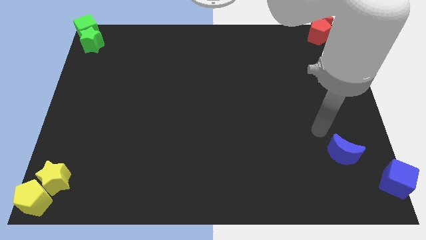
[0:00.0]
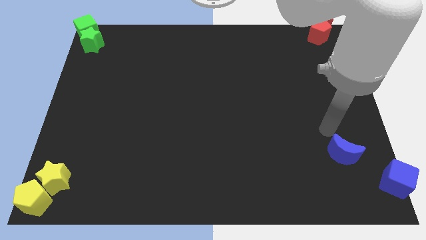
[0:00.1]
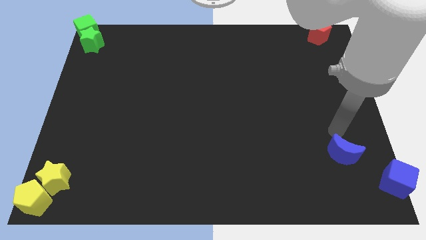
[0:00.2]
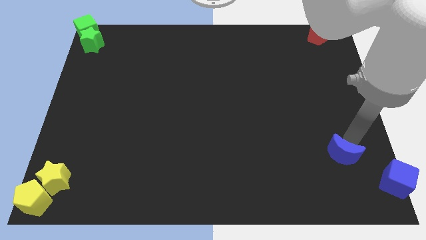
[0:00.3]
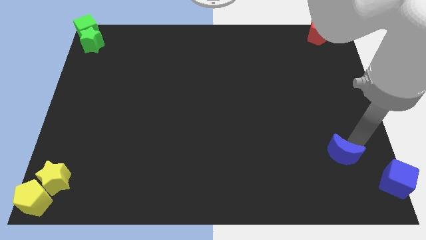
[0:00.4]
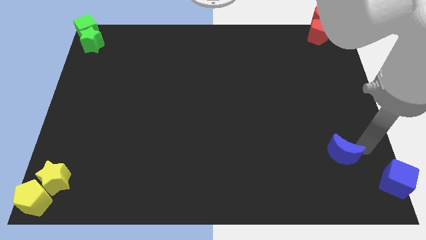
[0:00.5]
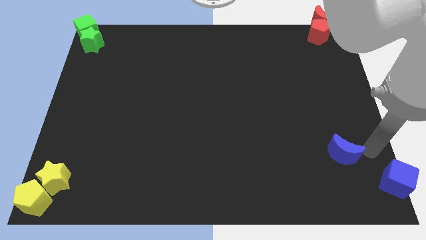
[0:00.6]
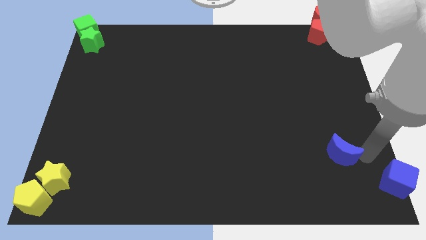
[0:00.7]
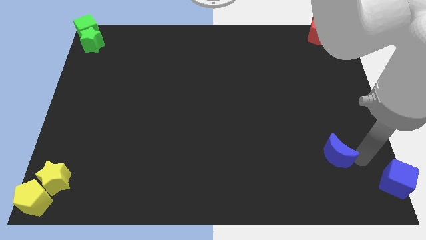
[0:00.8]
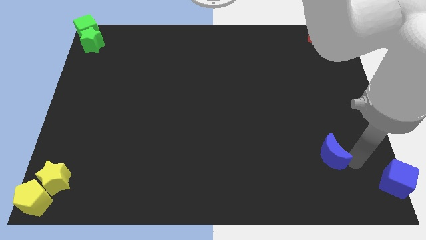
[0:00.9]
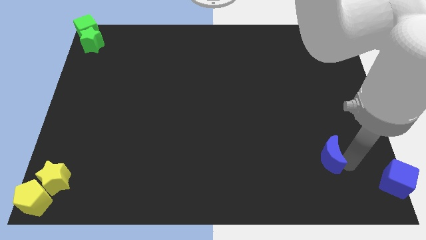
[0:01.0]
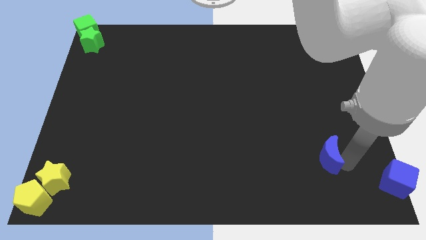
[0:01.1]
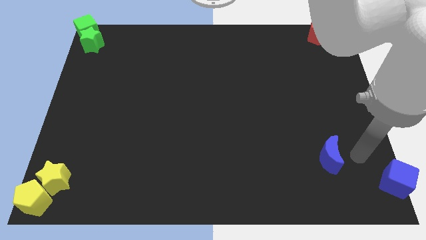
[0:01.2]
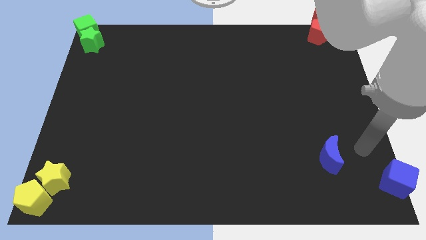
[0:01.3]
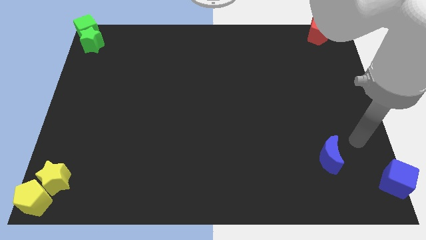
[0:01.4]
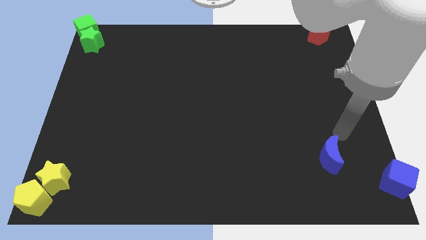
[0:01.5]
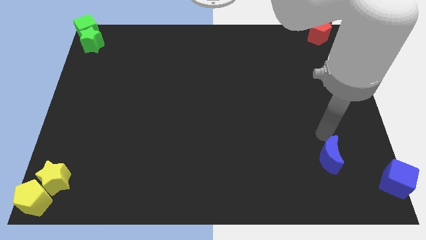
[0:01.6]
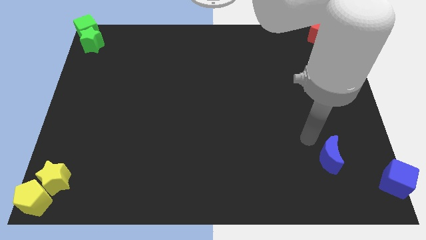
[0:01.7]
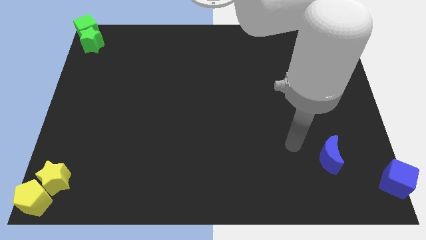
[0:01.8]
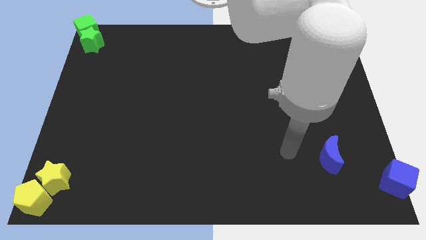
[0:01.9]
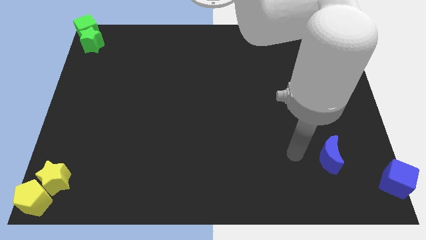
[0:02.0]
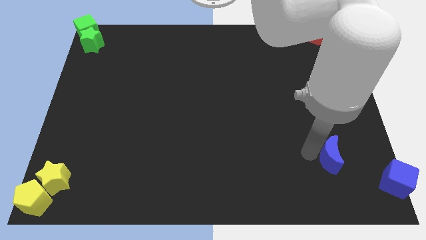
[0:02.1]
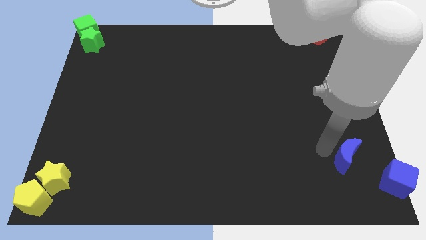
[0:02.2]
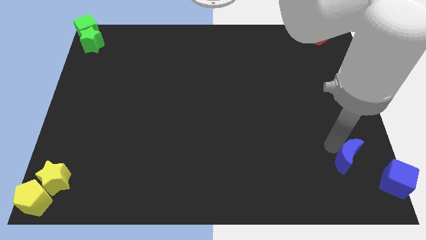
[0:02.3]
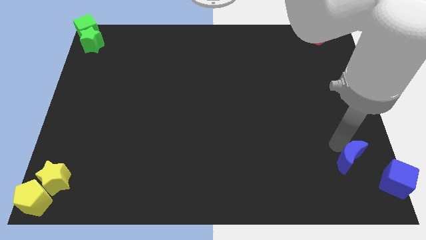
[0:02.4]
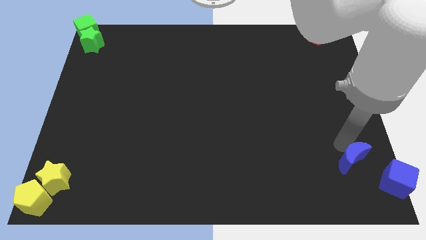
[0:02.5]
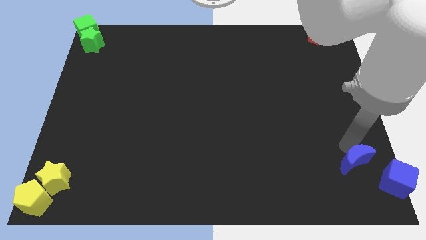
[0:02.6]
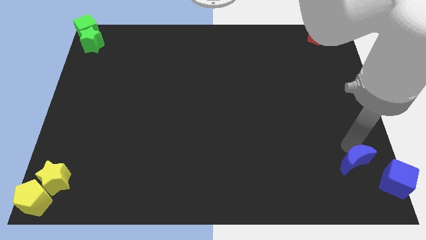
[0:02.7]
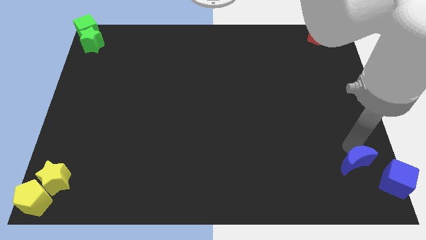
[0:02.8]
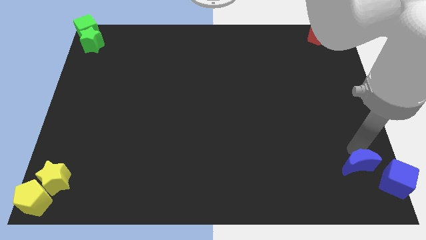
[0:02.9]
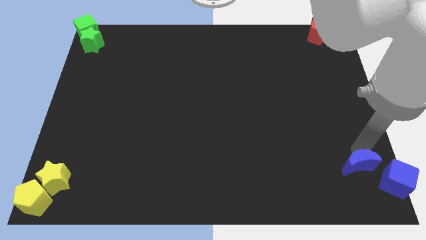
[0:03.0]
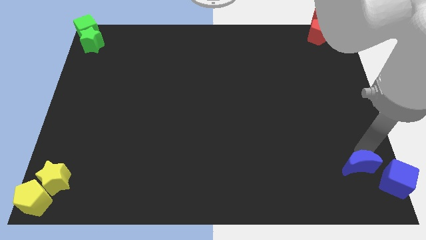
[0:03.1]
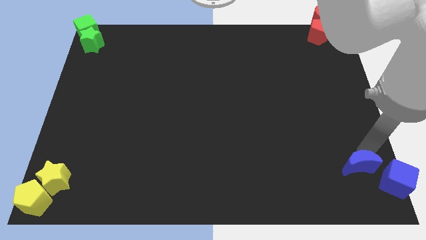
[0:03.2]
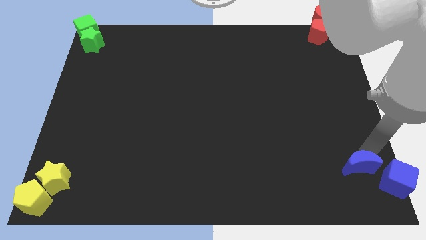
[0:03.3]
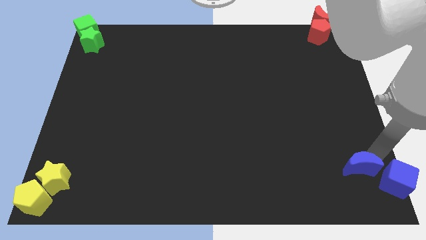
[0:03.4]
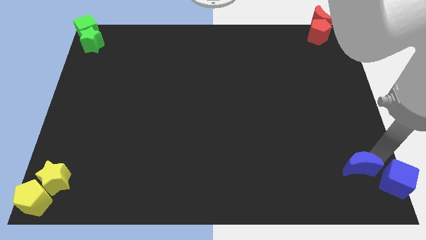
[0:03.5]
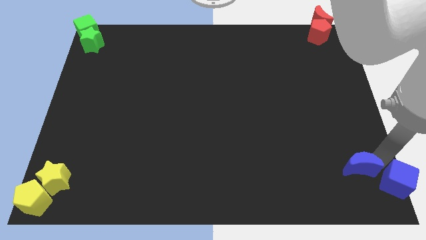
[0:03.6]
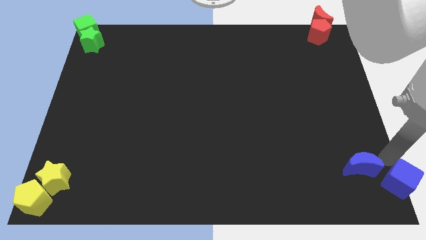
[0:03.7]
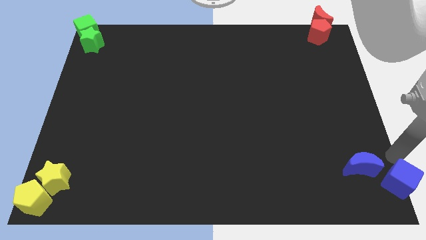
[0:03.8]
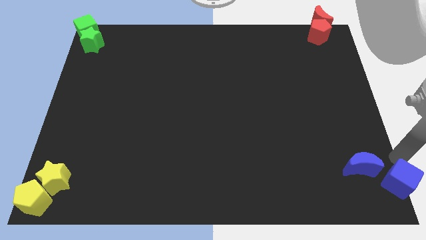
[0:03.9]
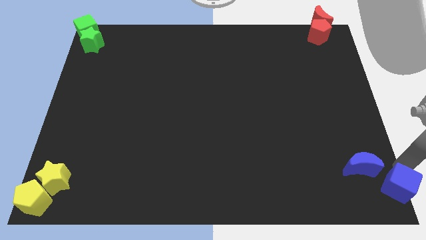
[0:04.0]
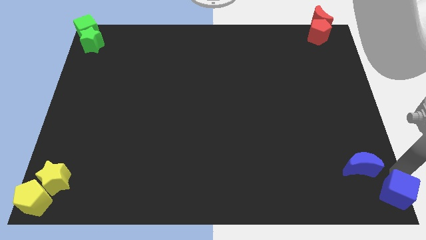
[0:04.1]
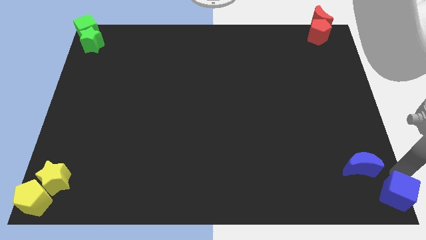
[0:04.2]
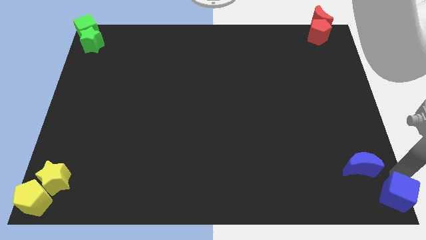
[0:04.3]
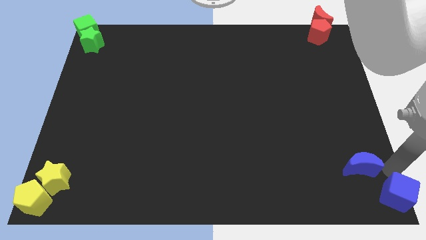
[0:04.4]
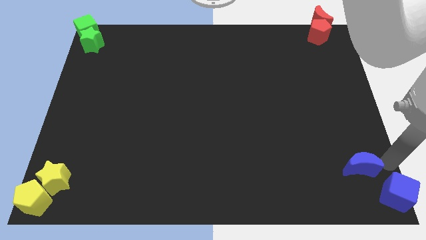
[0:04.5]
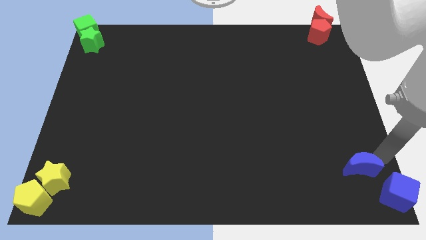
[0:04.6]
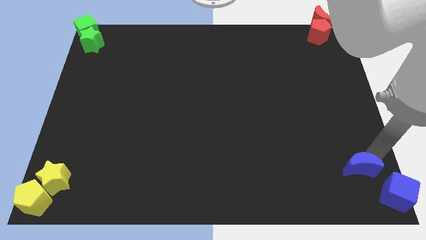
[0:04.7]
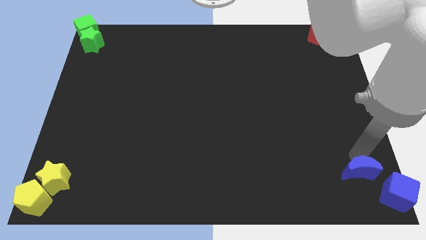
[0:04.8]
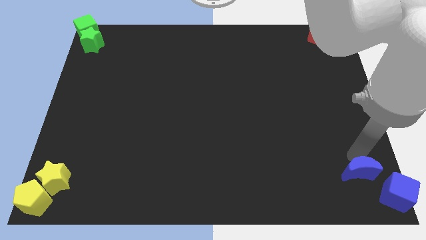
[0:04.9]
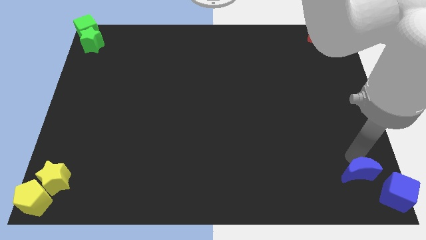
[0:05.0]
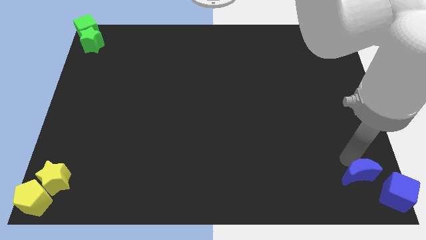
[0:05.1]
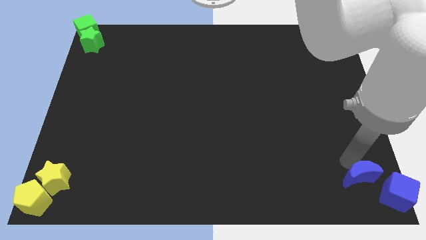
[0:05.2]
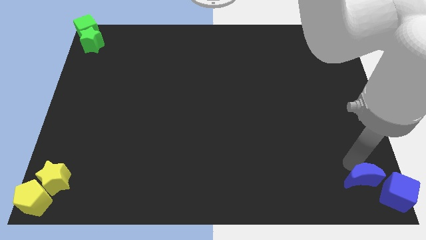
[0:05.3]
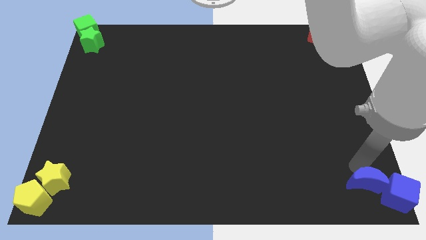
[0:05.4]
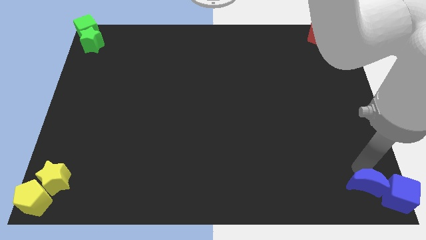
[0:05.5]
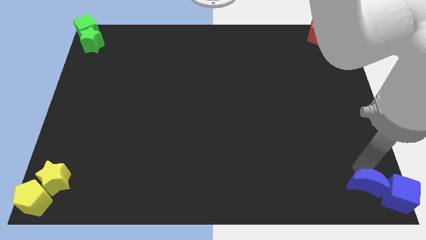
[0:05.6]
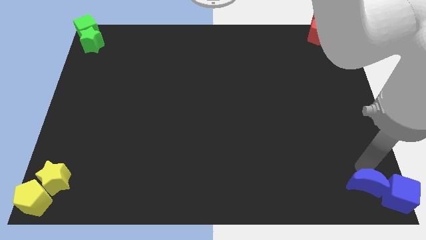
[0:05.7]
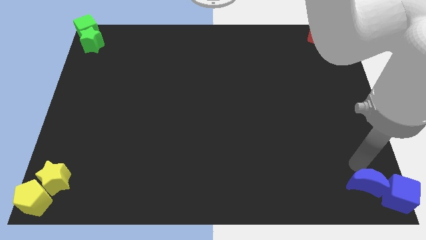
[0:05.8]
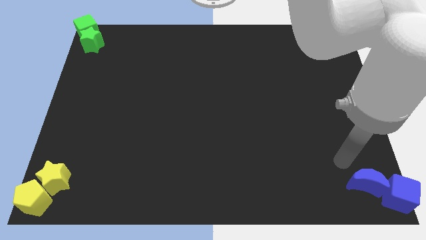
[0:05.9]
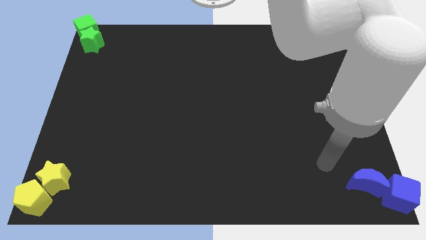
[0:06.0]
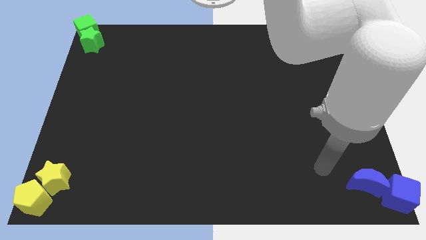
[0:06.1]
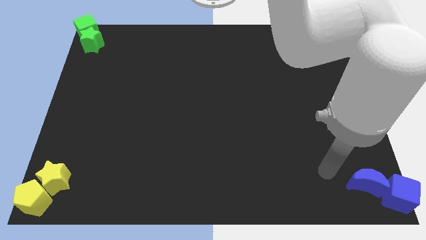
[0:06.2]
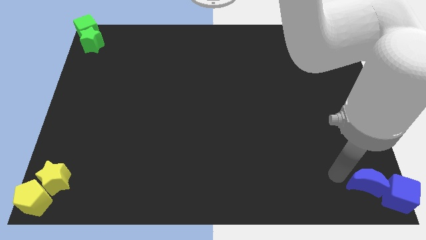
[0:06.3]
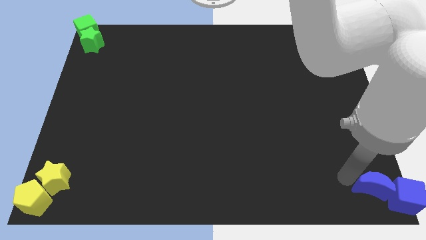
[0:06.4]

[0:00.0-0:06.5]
move the blue blocks towards the bottom right corner of the board

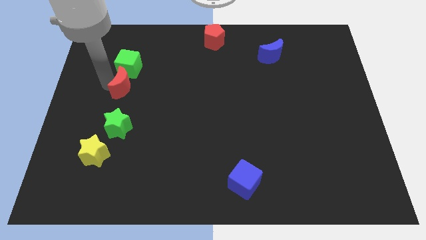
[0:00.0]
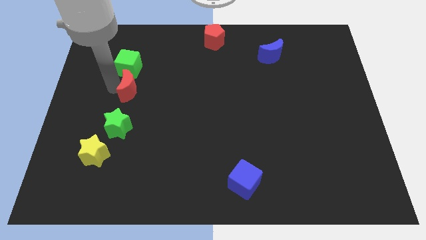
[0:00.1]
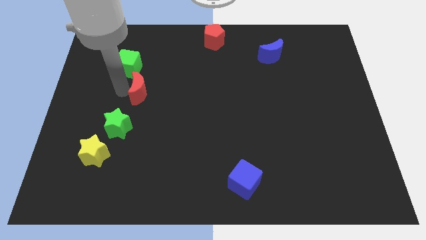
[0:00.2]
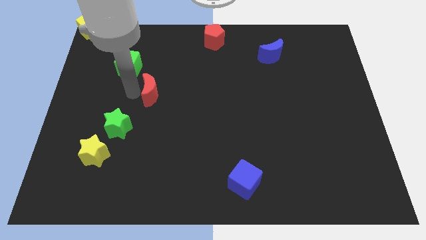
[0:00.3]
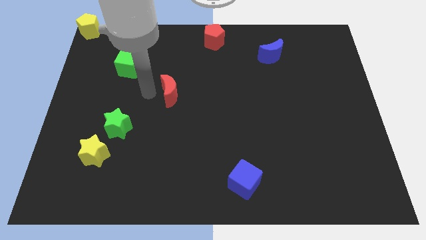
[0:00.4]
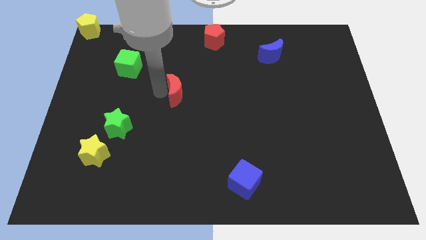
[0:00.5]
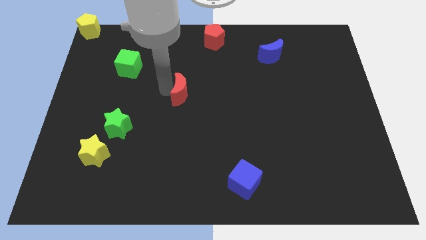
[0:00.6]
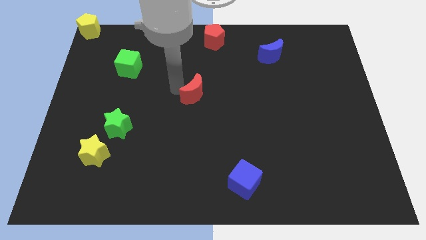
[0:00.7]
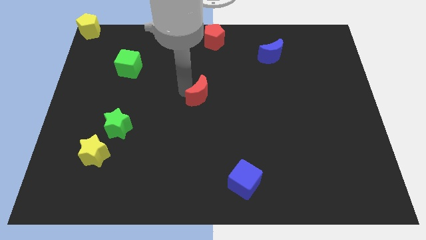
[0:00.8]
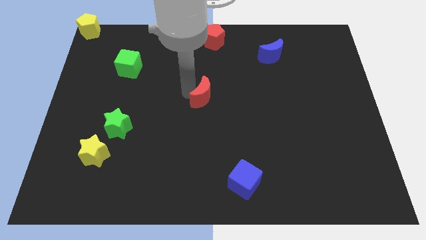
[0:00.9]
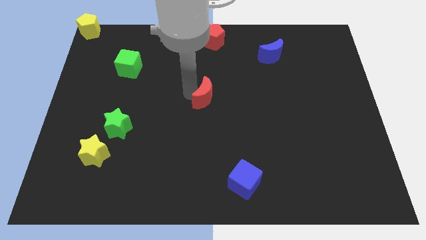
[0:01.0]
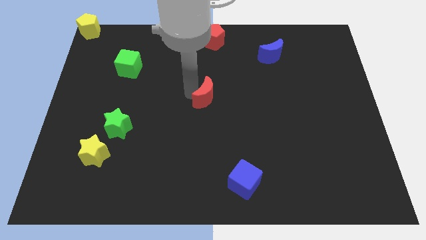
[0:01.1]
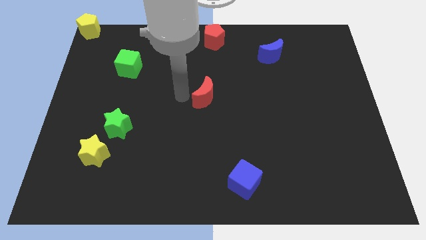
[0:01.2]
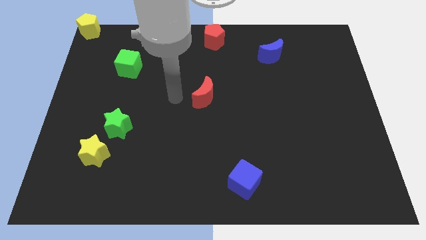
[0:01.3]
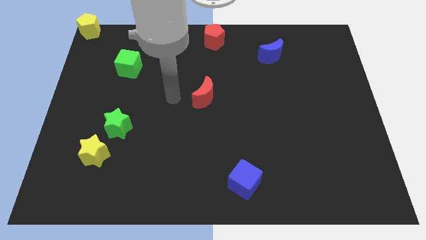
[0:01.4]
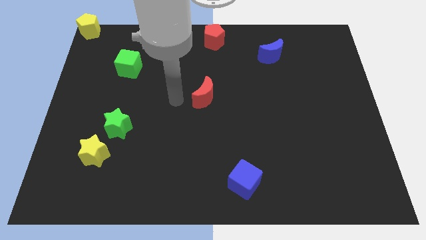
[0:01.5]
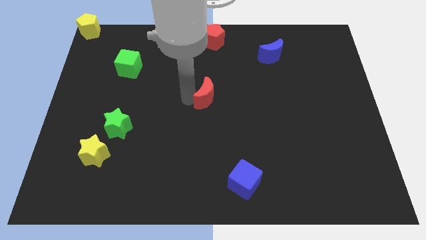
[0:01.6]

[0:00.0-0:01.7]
move the red crescent diagonally to the blue crescent

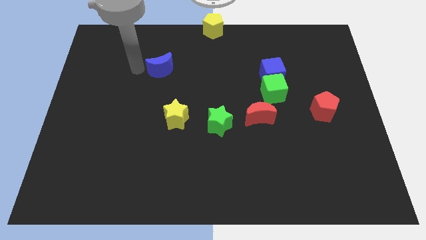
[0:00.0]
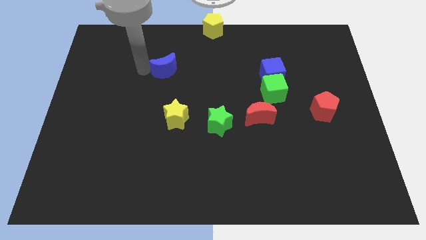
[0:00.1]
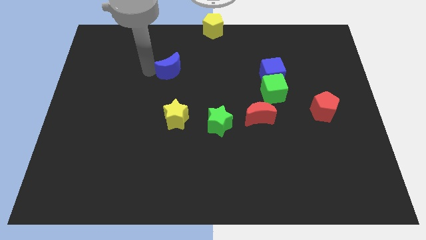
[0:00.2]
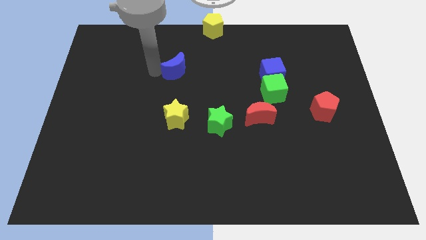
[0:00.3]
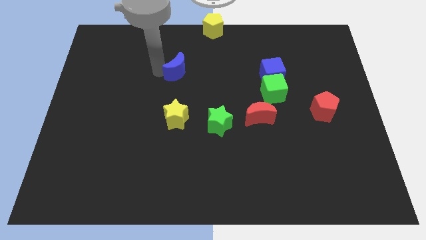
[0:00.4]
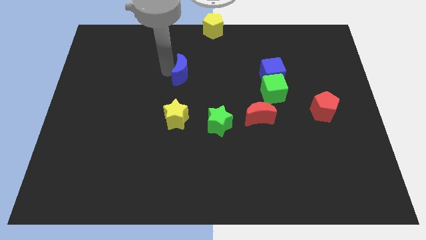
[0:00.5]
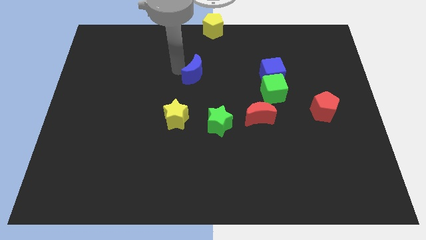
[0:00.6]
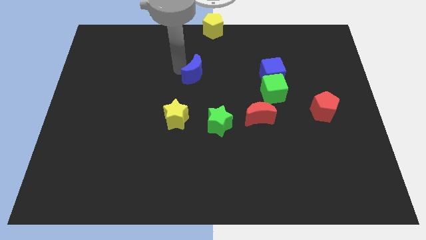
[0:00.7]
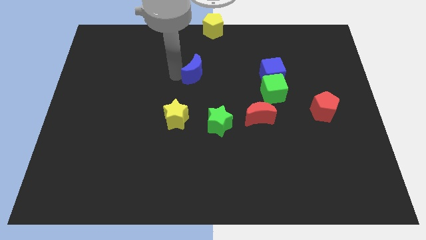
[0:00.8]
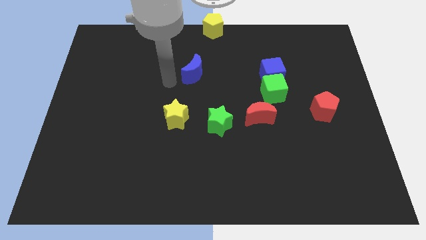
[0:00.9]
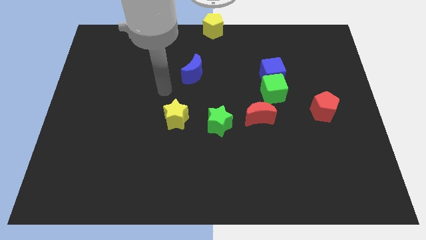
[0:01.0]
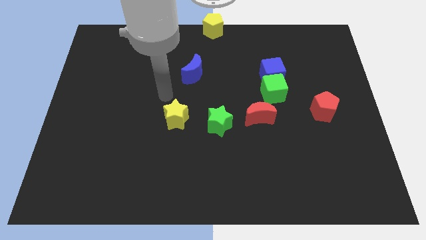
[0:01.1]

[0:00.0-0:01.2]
move the blue crescent above the yellow star
